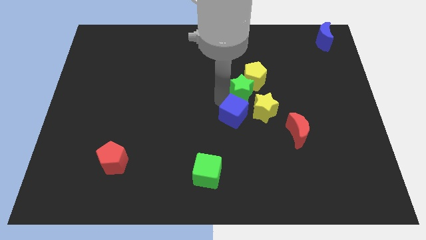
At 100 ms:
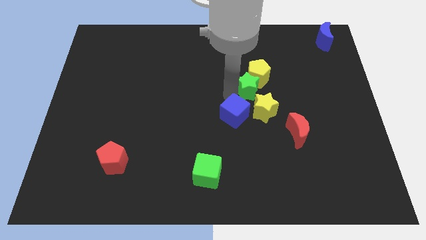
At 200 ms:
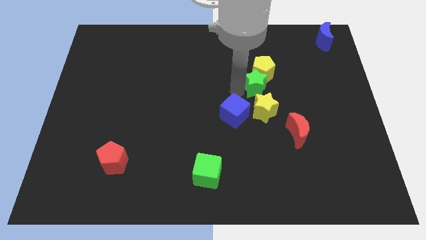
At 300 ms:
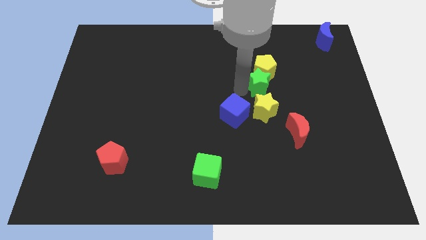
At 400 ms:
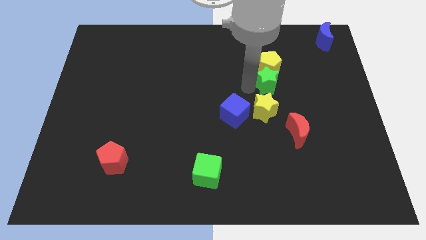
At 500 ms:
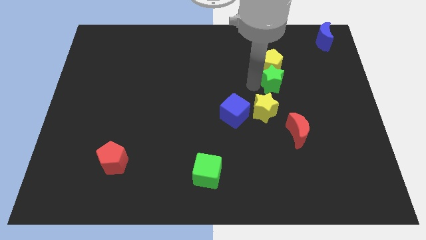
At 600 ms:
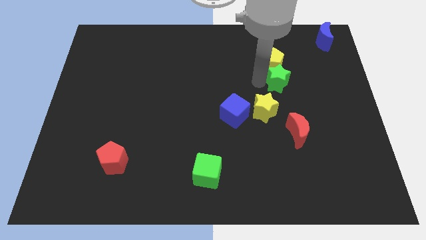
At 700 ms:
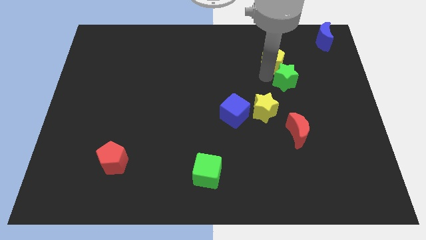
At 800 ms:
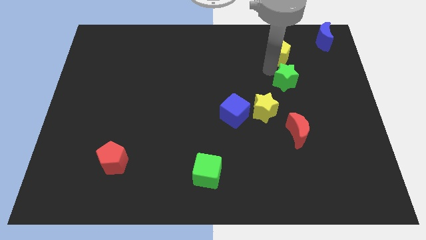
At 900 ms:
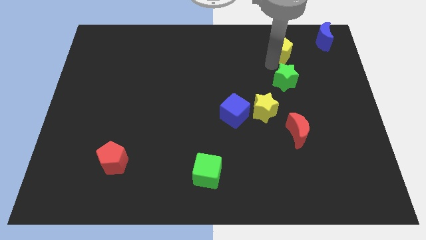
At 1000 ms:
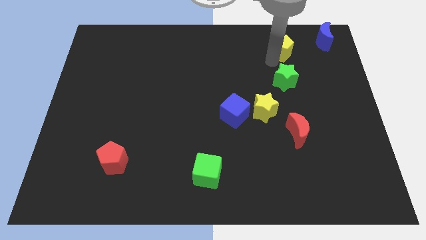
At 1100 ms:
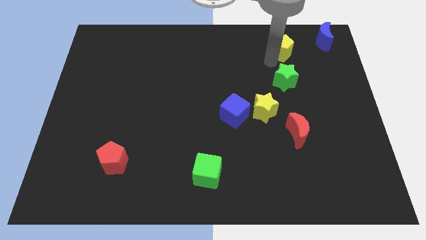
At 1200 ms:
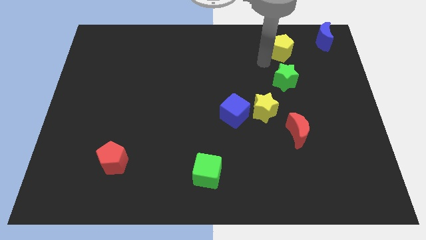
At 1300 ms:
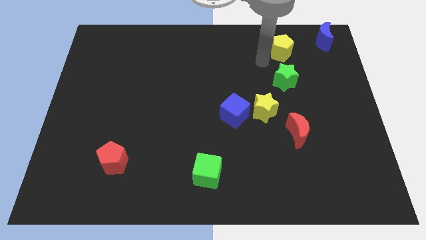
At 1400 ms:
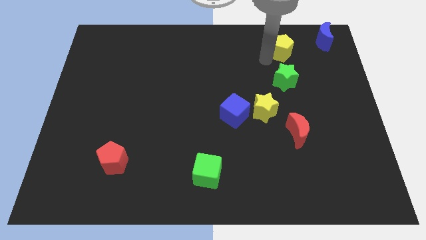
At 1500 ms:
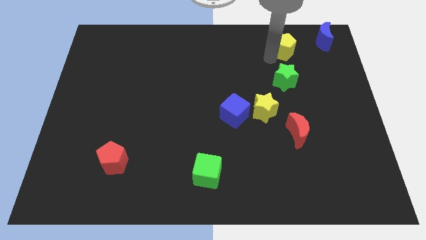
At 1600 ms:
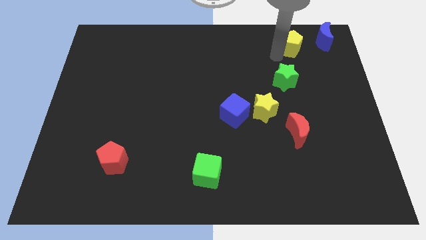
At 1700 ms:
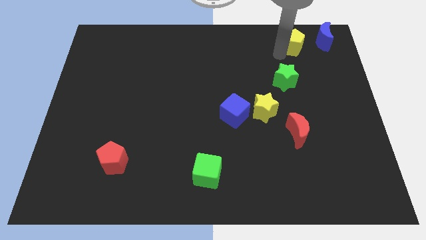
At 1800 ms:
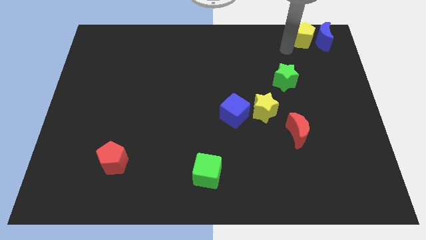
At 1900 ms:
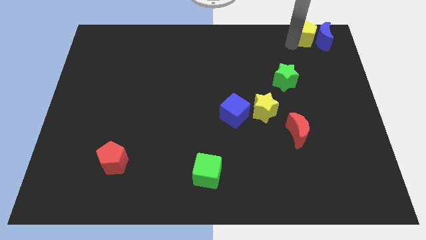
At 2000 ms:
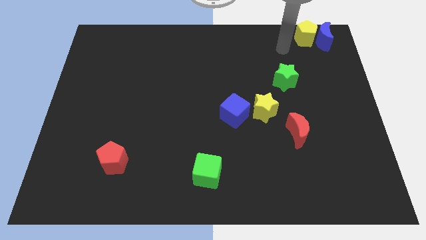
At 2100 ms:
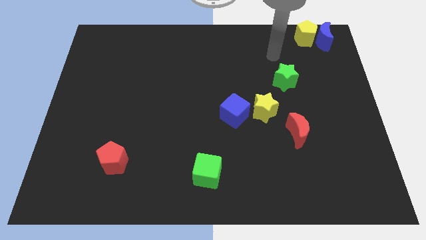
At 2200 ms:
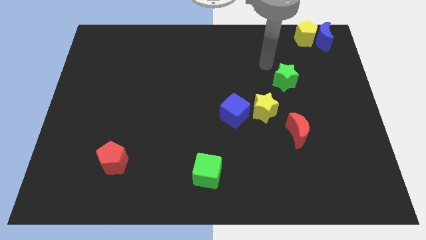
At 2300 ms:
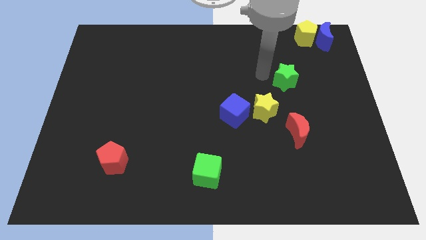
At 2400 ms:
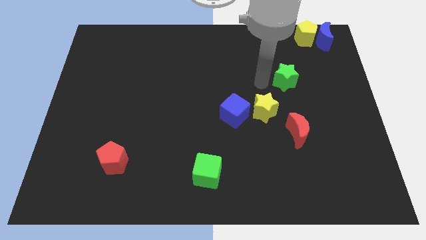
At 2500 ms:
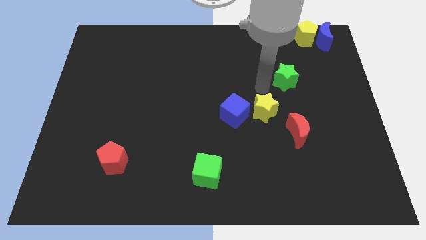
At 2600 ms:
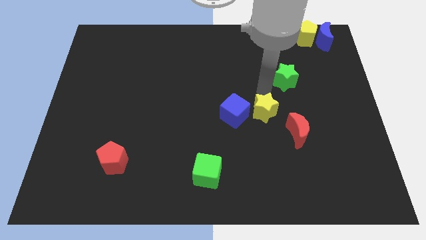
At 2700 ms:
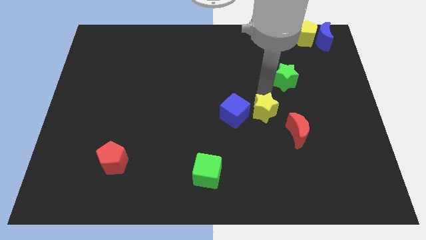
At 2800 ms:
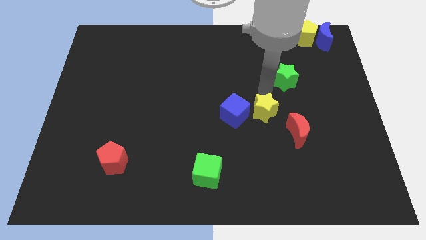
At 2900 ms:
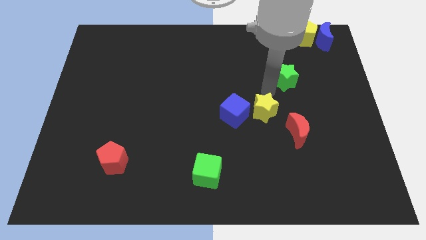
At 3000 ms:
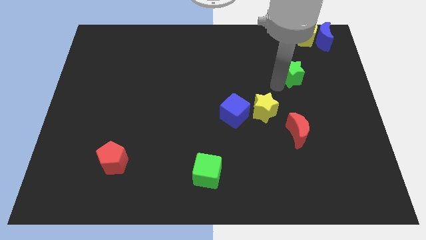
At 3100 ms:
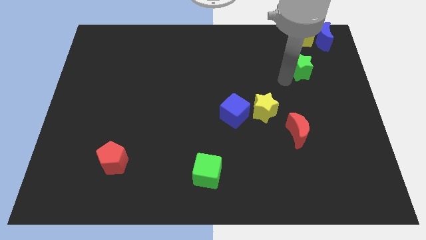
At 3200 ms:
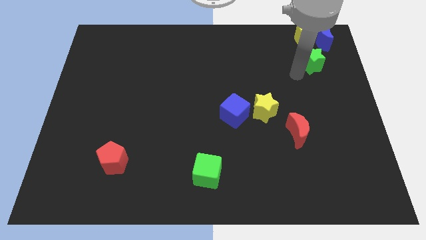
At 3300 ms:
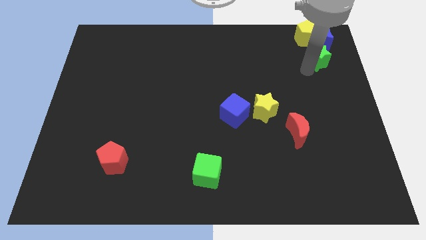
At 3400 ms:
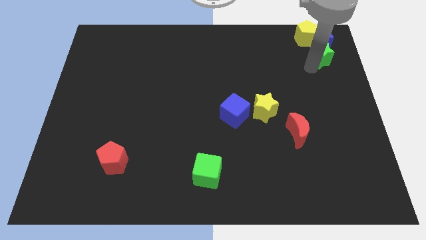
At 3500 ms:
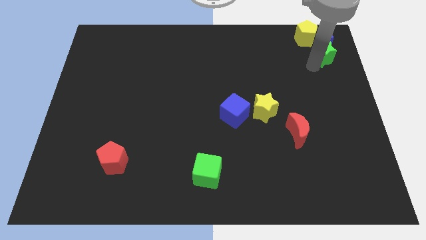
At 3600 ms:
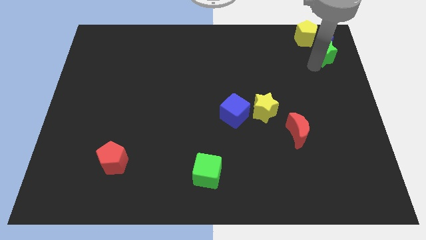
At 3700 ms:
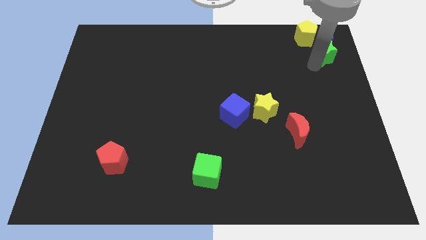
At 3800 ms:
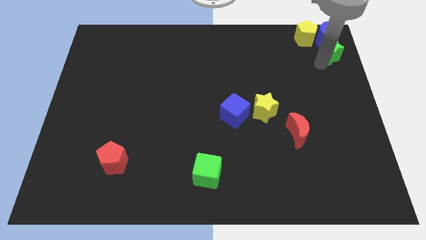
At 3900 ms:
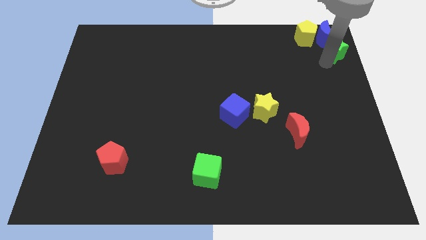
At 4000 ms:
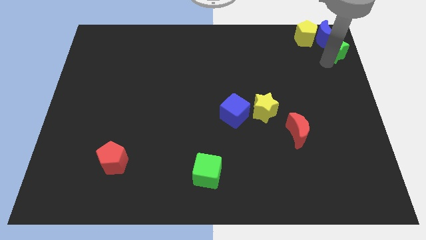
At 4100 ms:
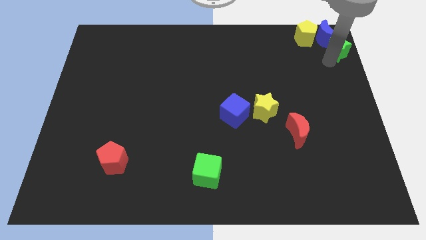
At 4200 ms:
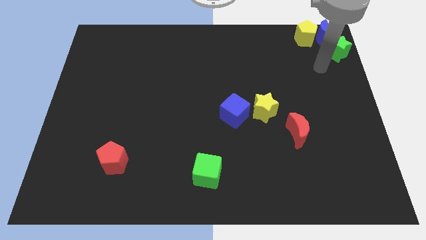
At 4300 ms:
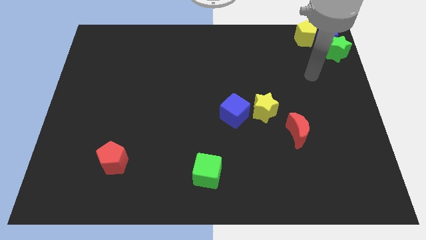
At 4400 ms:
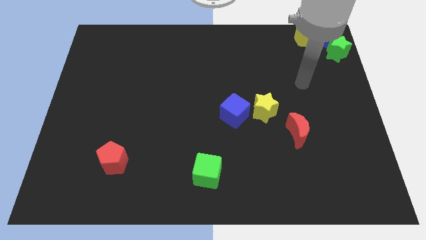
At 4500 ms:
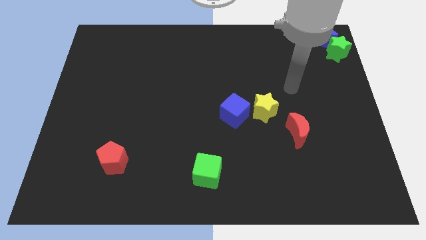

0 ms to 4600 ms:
move the yellow pentagon and green star towards the blue crescent

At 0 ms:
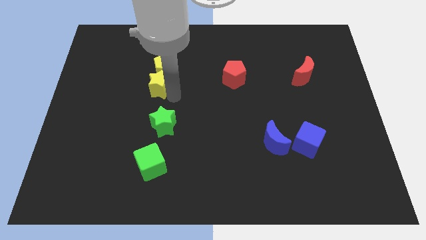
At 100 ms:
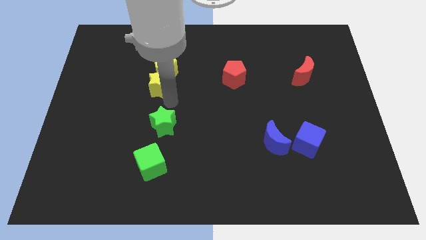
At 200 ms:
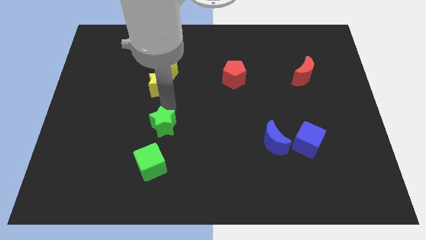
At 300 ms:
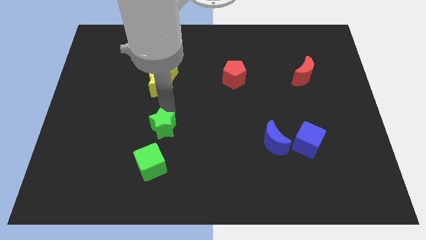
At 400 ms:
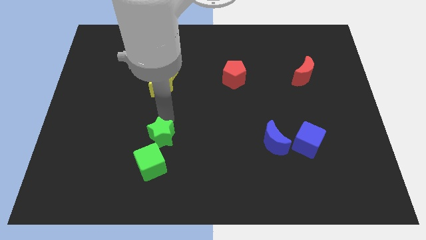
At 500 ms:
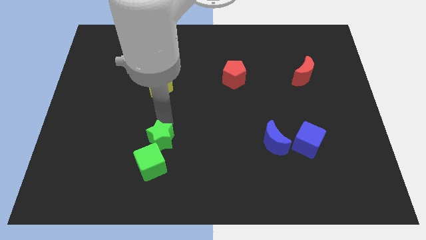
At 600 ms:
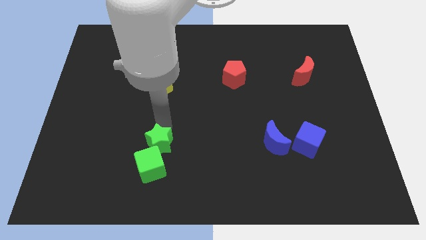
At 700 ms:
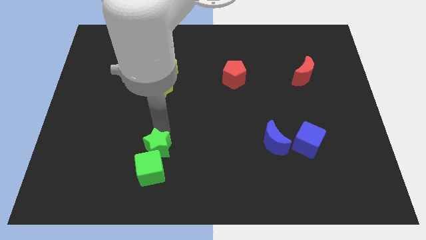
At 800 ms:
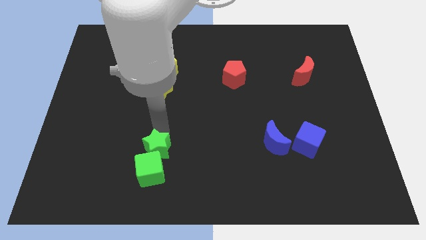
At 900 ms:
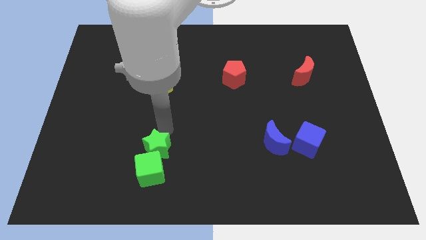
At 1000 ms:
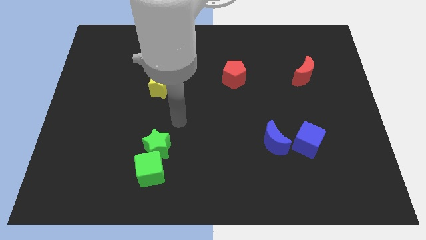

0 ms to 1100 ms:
push the green star into the green cube

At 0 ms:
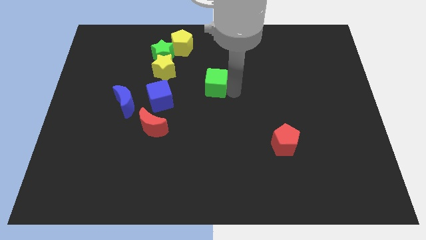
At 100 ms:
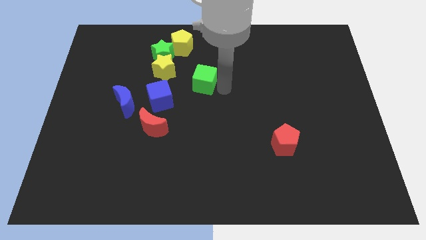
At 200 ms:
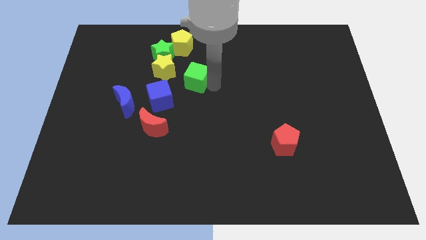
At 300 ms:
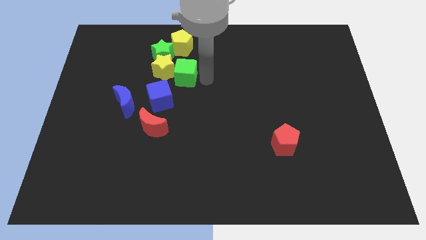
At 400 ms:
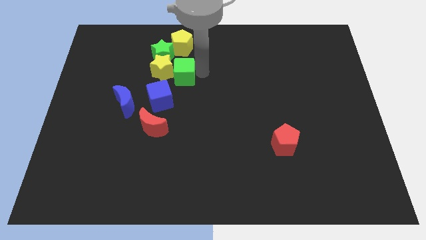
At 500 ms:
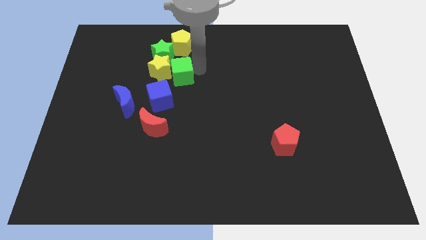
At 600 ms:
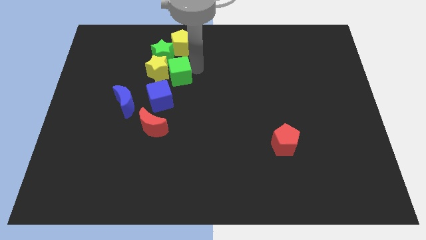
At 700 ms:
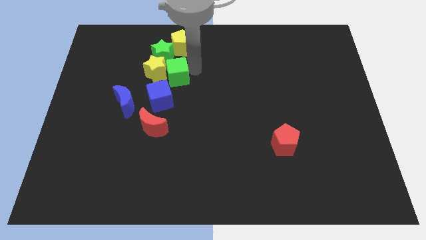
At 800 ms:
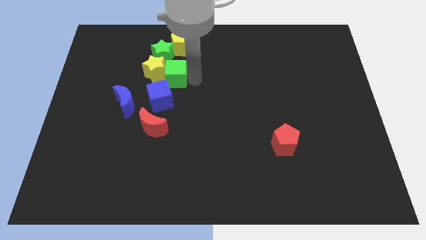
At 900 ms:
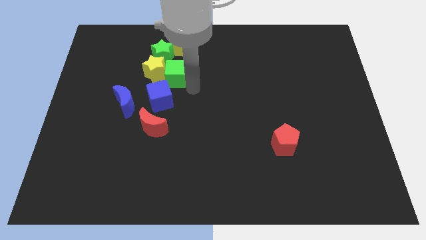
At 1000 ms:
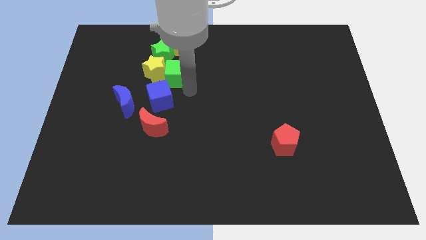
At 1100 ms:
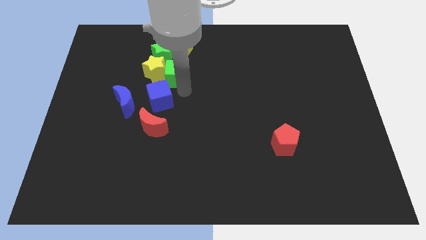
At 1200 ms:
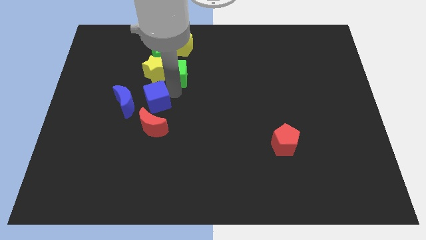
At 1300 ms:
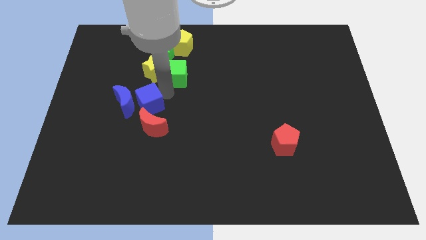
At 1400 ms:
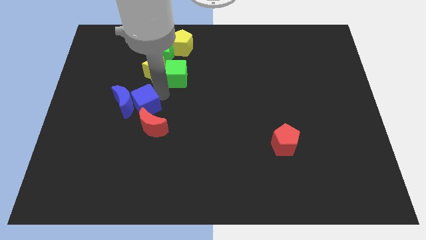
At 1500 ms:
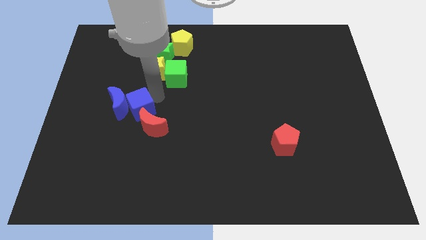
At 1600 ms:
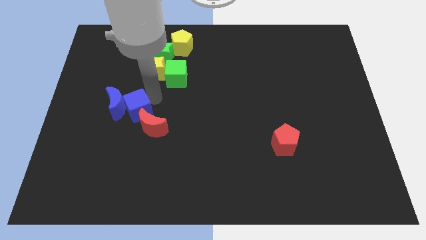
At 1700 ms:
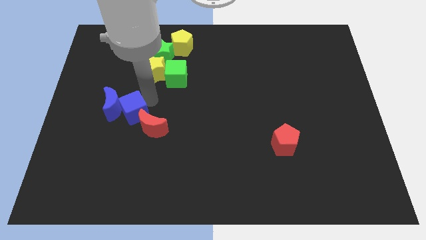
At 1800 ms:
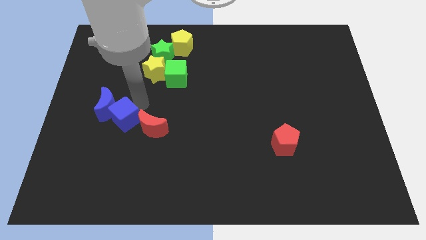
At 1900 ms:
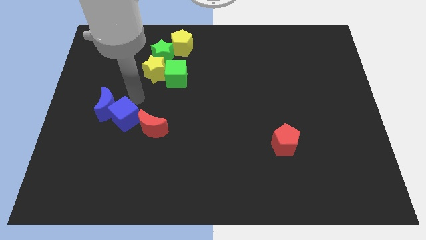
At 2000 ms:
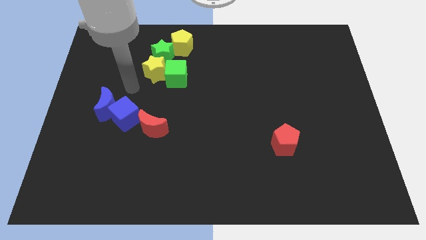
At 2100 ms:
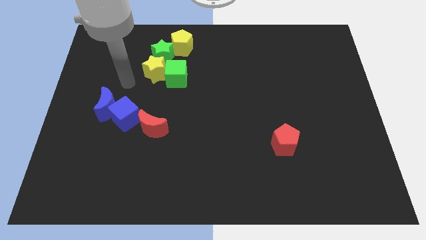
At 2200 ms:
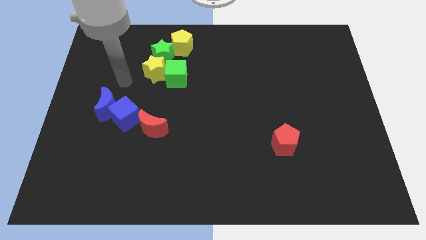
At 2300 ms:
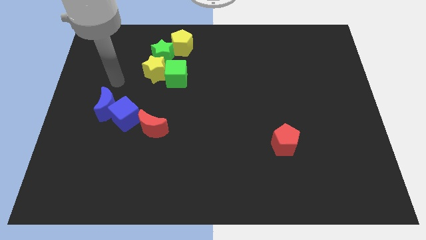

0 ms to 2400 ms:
place the blue cube above the red crescent

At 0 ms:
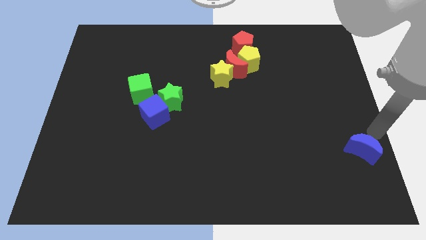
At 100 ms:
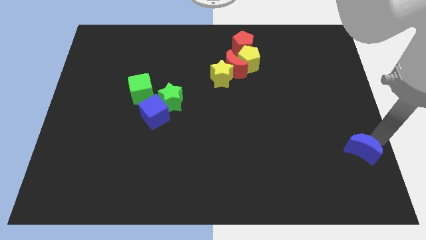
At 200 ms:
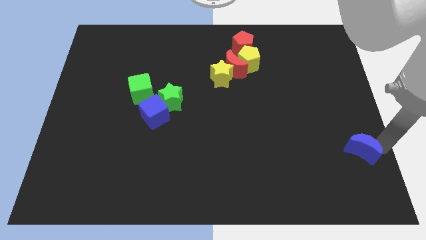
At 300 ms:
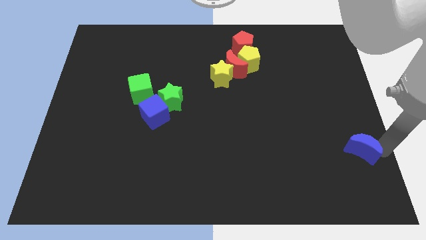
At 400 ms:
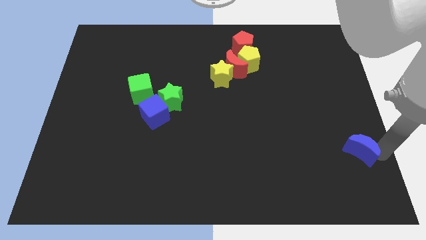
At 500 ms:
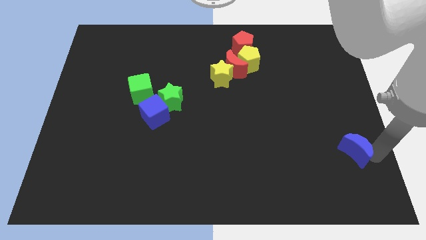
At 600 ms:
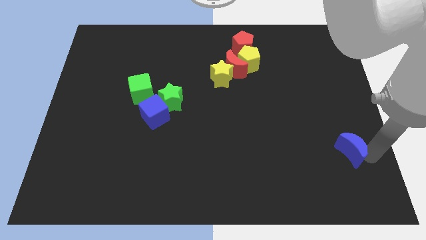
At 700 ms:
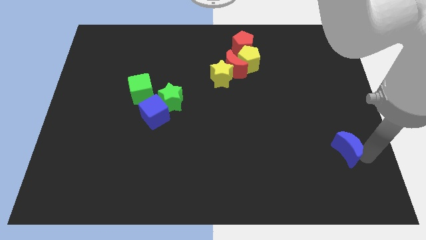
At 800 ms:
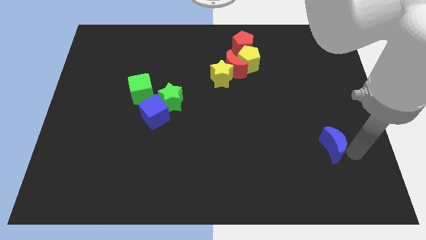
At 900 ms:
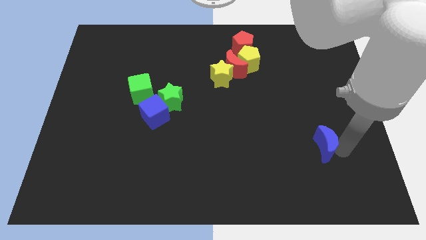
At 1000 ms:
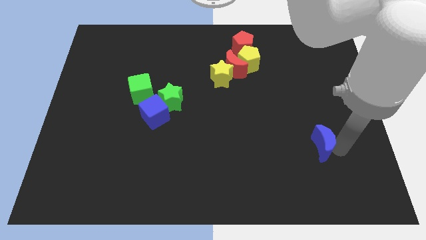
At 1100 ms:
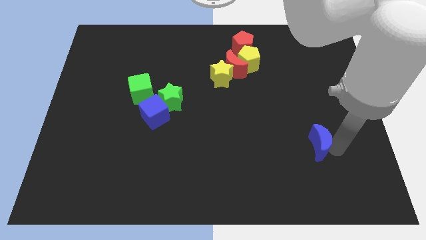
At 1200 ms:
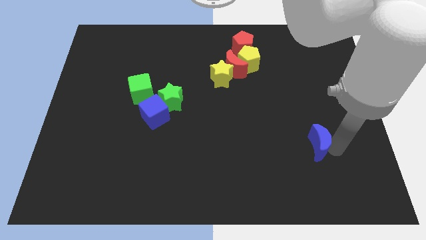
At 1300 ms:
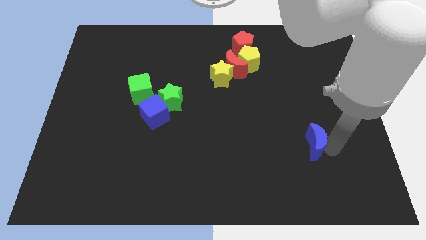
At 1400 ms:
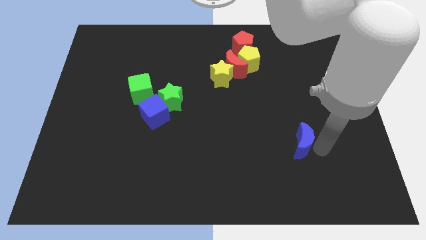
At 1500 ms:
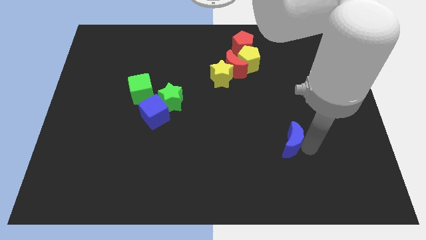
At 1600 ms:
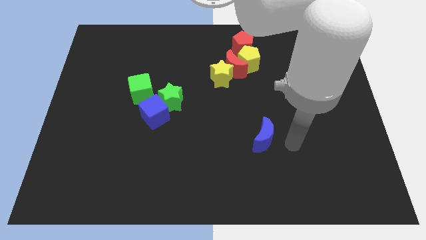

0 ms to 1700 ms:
move blue crescent towards left
